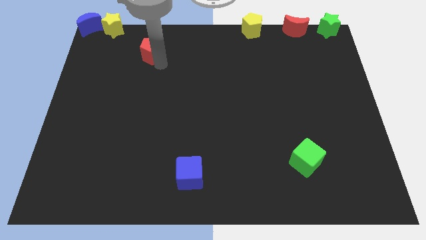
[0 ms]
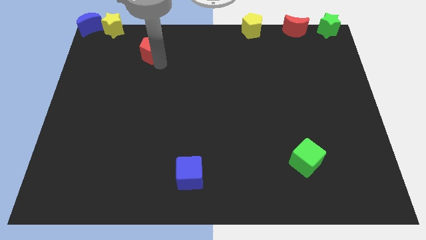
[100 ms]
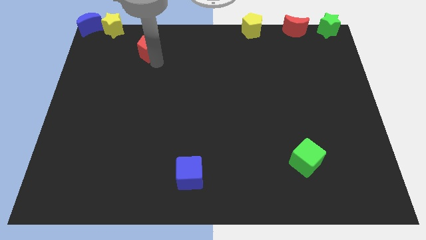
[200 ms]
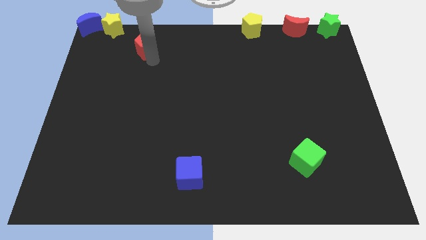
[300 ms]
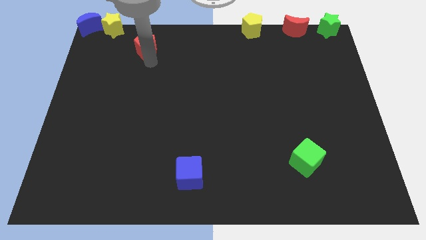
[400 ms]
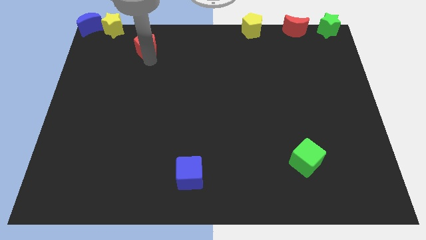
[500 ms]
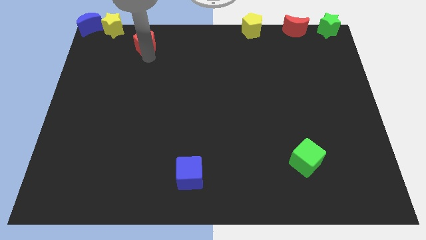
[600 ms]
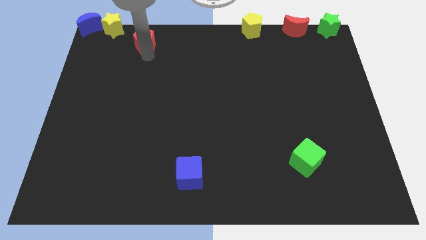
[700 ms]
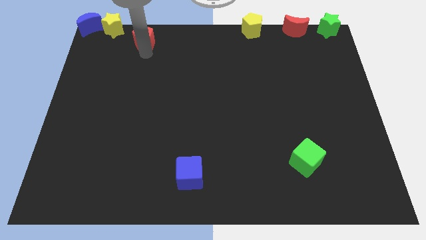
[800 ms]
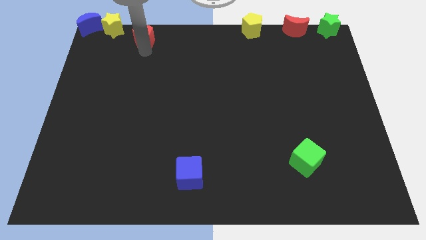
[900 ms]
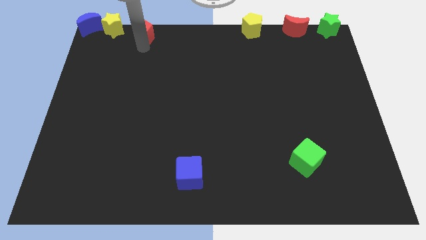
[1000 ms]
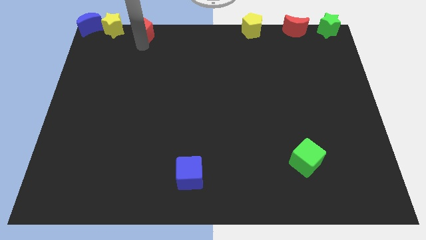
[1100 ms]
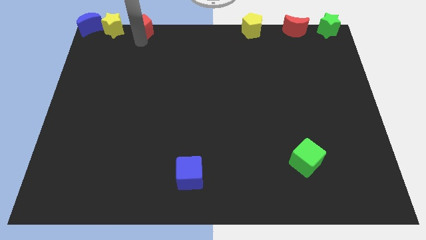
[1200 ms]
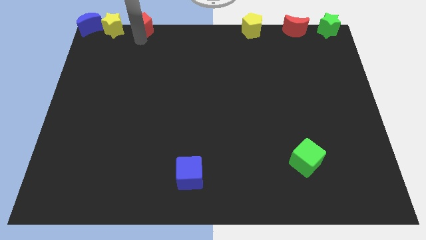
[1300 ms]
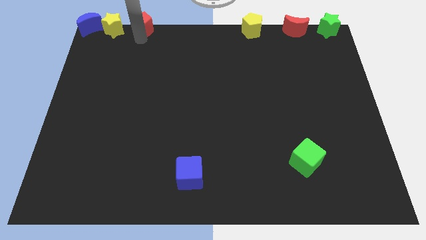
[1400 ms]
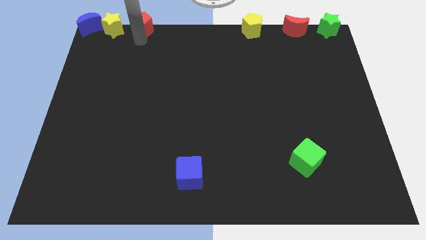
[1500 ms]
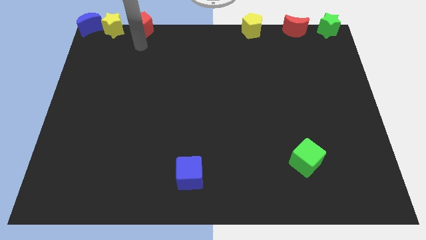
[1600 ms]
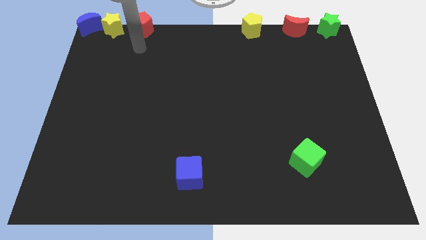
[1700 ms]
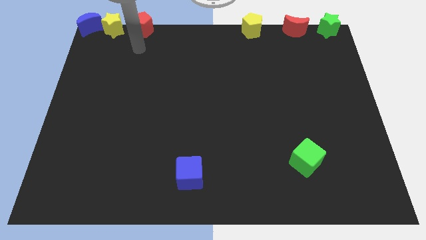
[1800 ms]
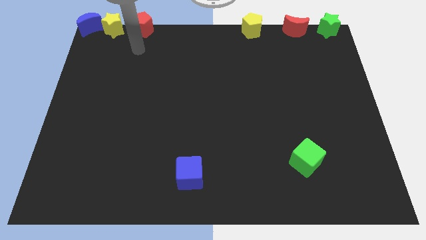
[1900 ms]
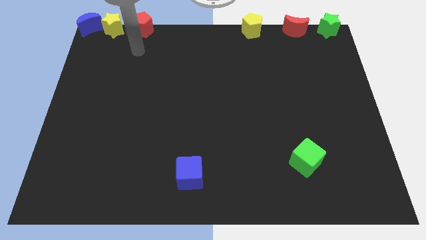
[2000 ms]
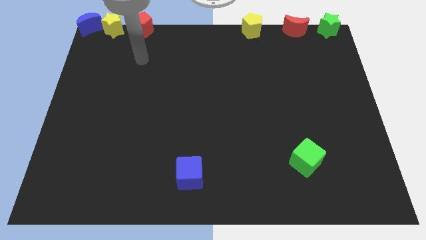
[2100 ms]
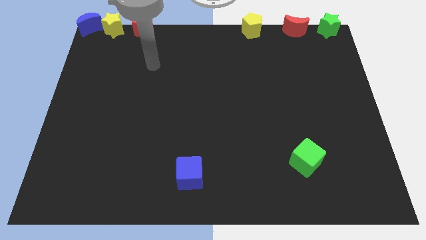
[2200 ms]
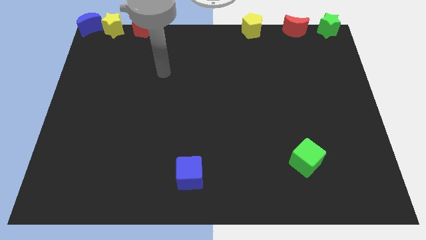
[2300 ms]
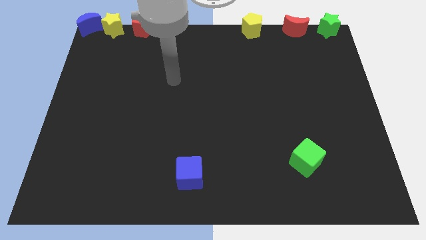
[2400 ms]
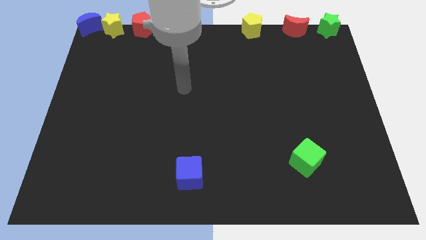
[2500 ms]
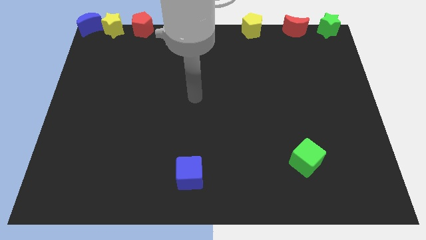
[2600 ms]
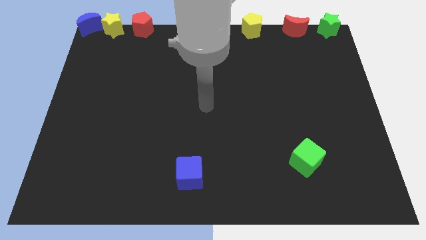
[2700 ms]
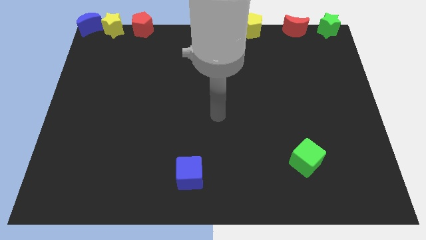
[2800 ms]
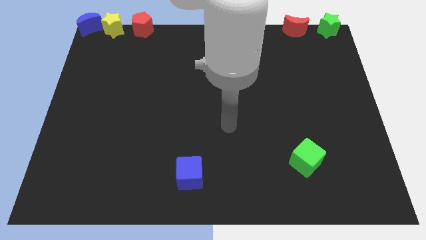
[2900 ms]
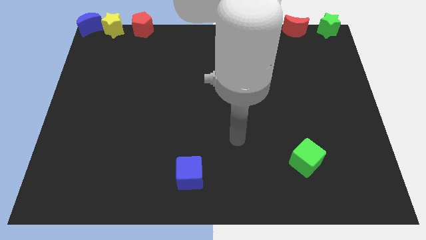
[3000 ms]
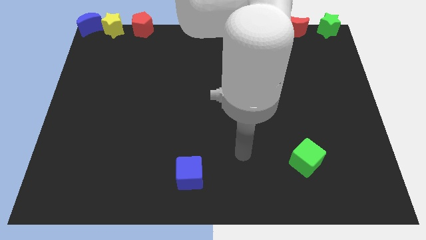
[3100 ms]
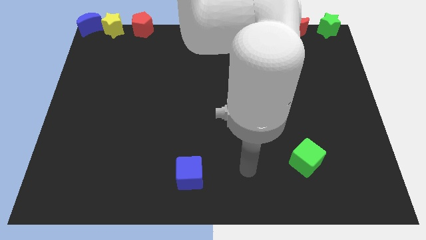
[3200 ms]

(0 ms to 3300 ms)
push the red pentagon to the right side of the yellow star

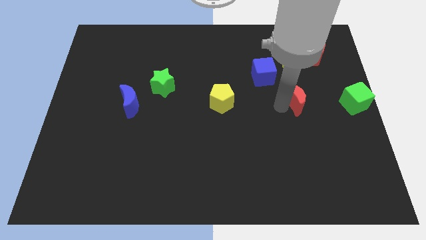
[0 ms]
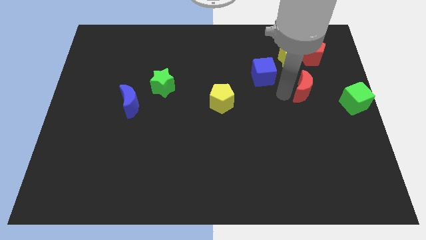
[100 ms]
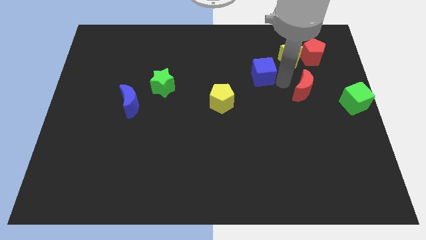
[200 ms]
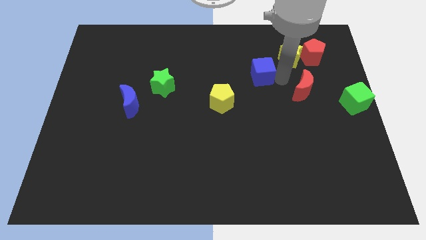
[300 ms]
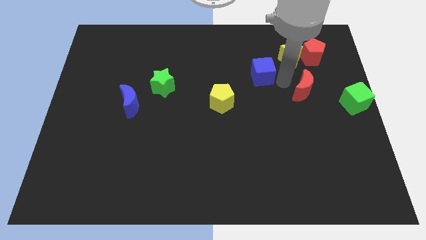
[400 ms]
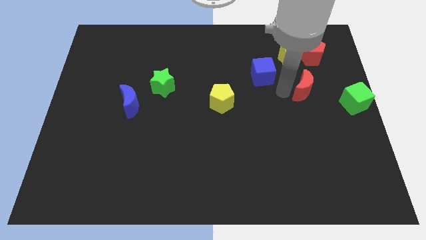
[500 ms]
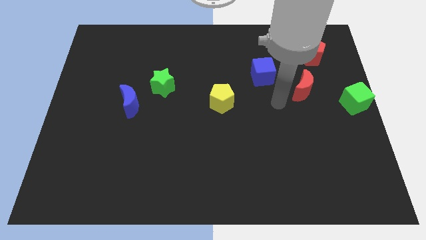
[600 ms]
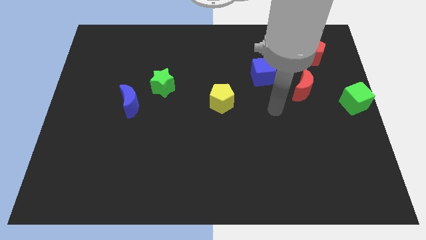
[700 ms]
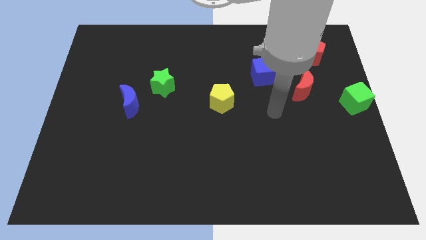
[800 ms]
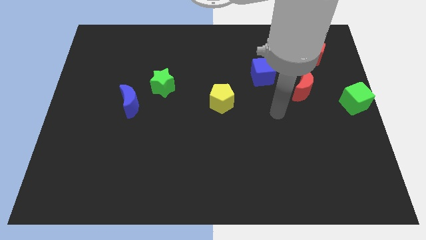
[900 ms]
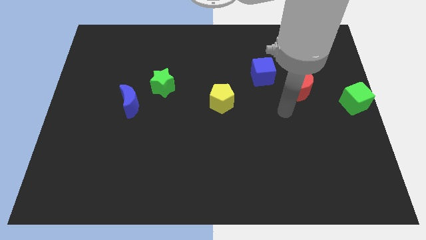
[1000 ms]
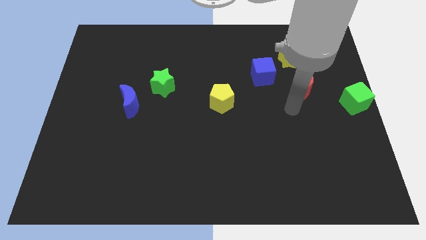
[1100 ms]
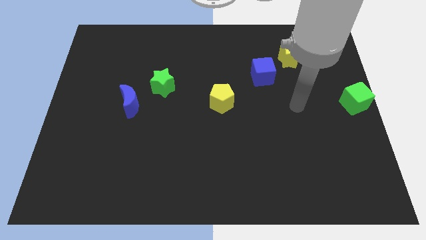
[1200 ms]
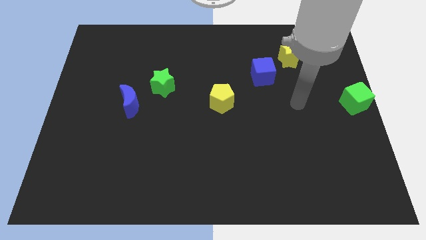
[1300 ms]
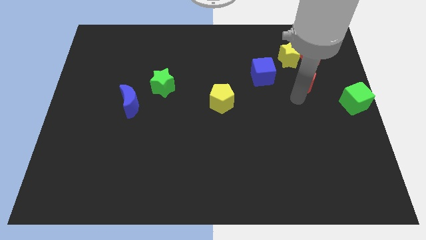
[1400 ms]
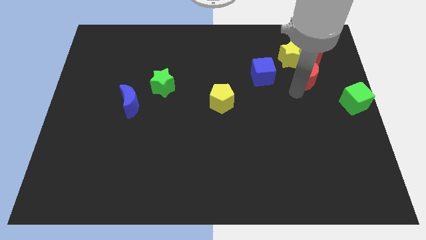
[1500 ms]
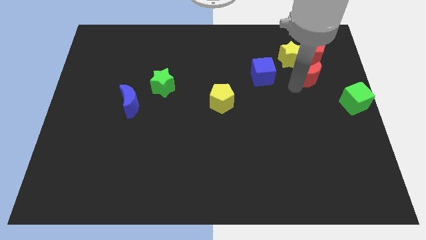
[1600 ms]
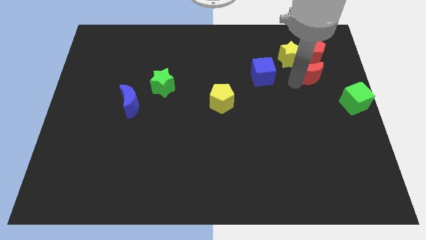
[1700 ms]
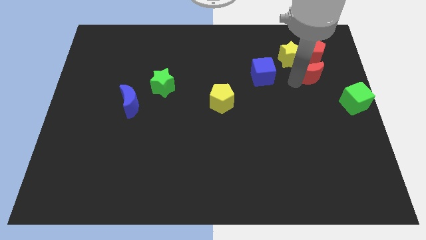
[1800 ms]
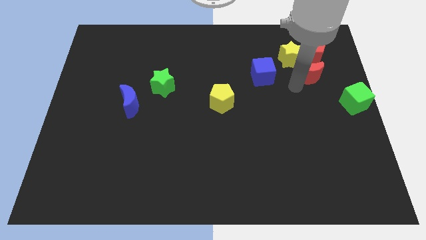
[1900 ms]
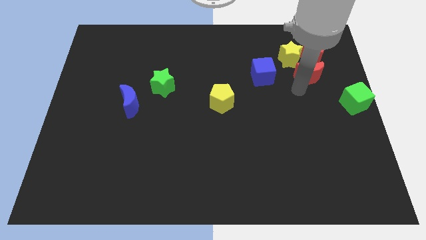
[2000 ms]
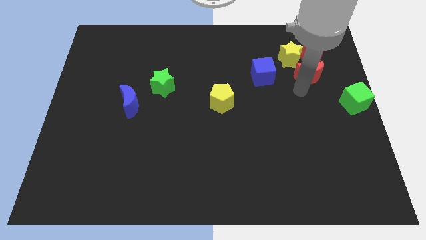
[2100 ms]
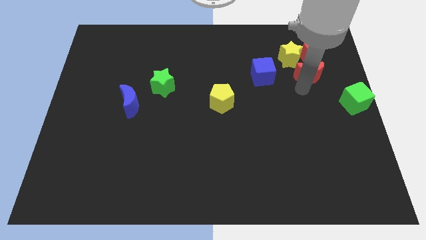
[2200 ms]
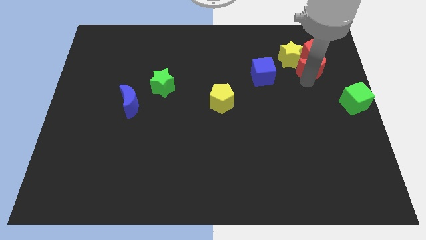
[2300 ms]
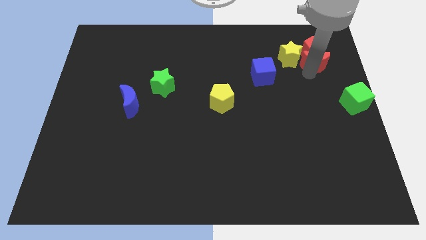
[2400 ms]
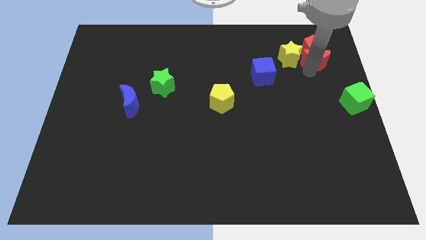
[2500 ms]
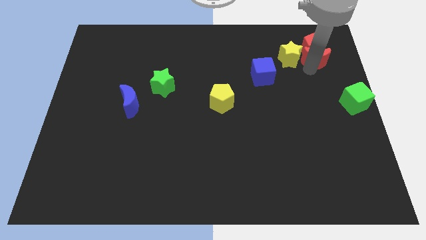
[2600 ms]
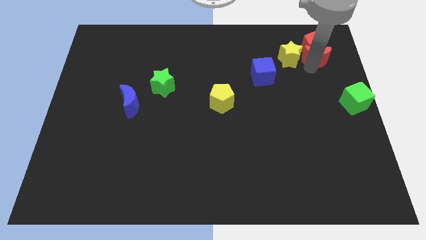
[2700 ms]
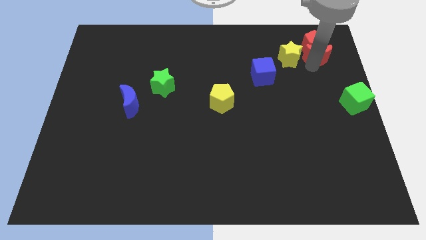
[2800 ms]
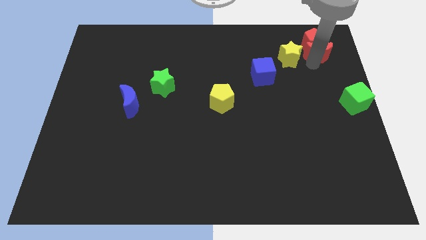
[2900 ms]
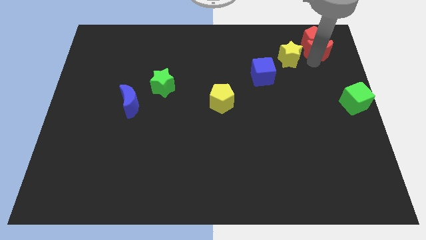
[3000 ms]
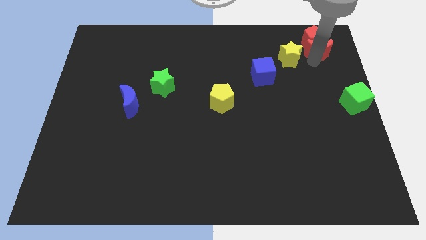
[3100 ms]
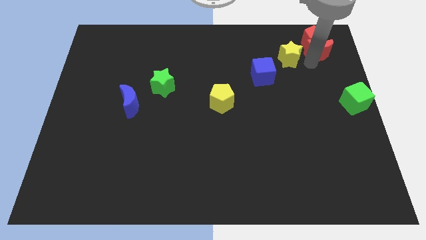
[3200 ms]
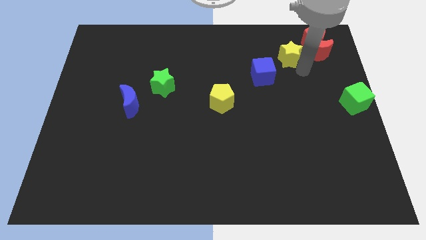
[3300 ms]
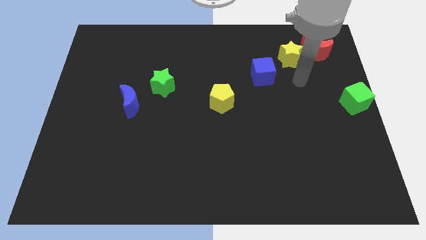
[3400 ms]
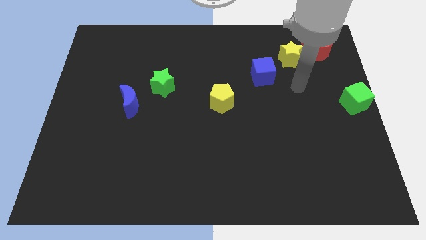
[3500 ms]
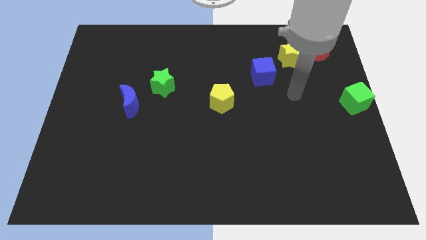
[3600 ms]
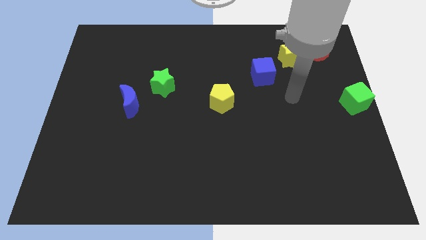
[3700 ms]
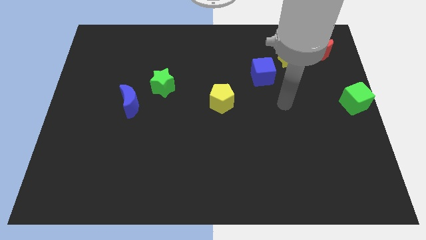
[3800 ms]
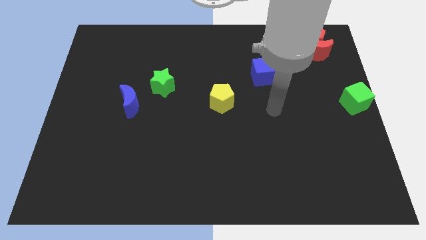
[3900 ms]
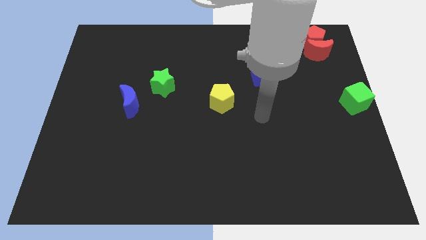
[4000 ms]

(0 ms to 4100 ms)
push the red pentagon and red crescent towards the top right corner of the board

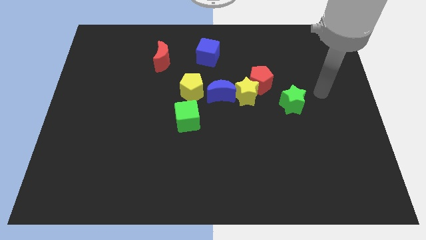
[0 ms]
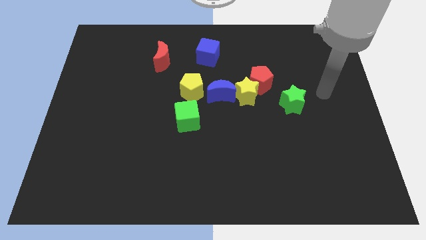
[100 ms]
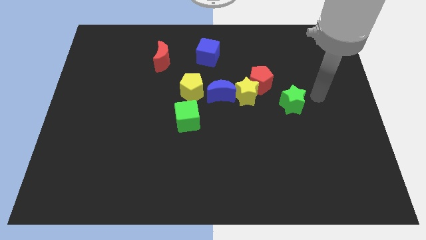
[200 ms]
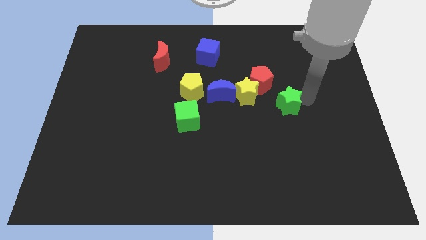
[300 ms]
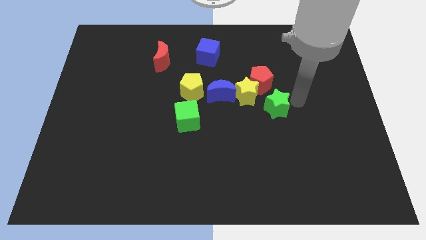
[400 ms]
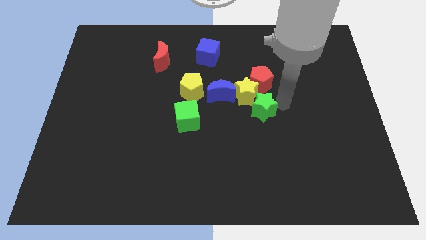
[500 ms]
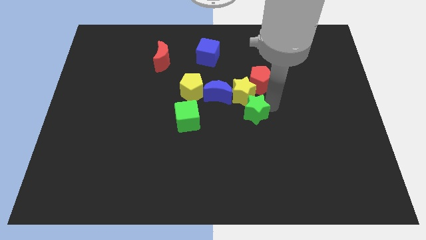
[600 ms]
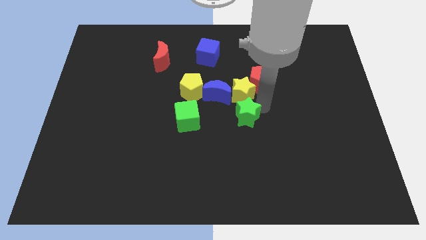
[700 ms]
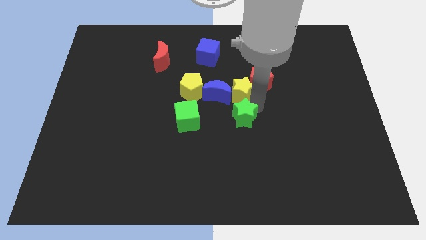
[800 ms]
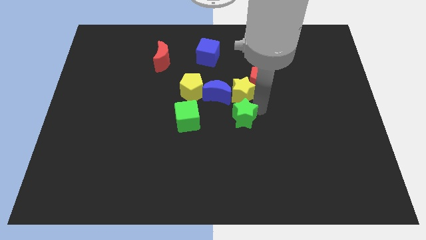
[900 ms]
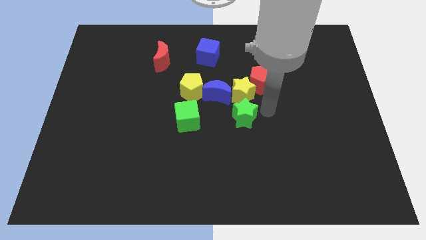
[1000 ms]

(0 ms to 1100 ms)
push the green star into the group of blocks

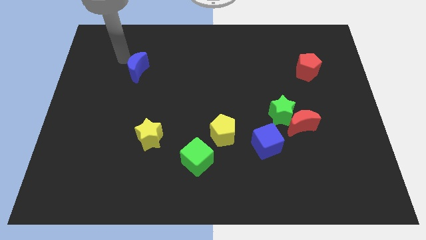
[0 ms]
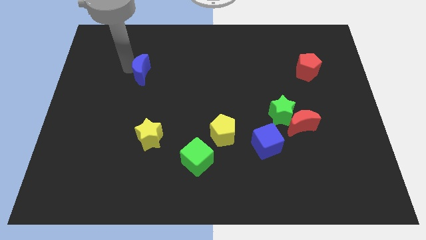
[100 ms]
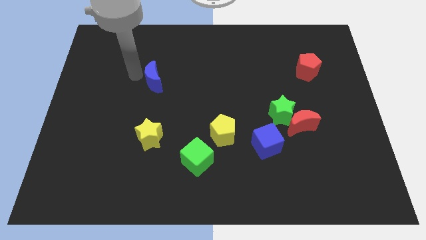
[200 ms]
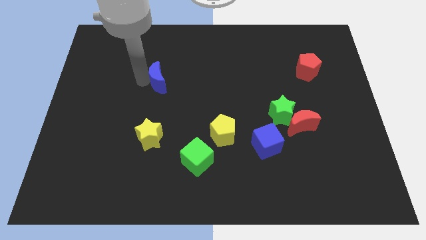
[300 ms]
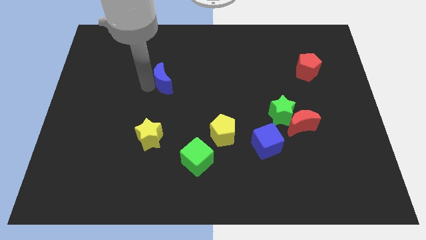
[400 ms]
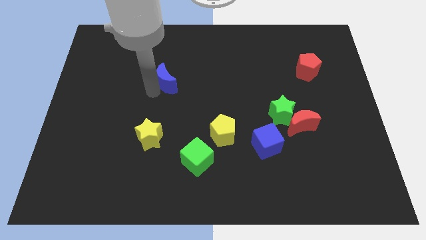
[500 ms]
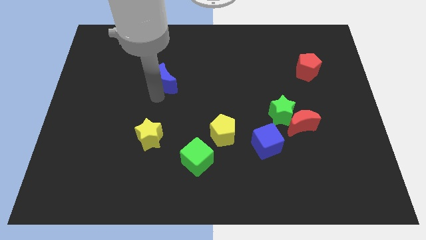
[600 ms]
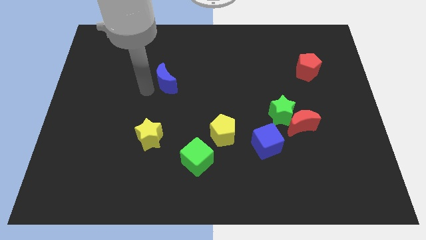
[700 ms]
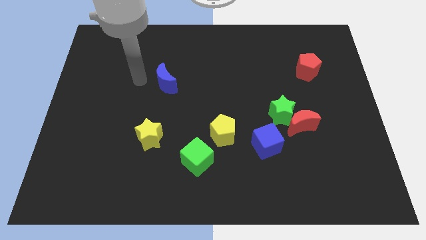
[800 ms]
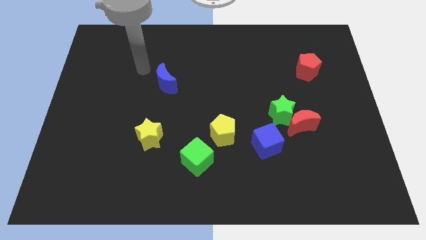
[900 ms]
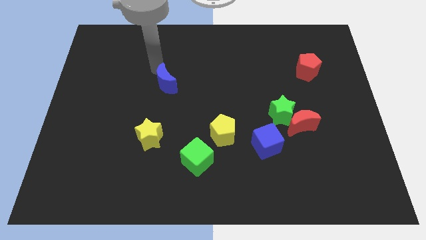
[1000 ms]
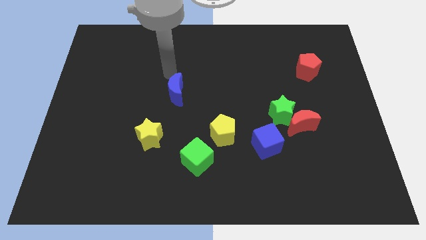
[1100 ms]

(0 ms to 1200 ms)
move the blue crescent diagonally top right to the yellow star
